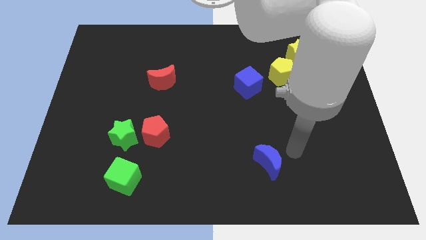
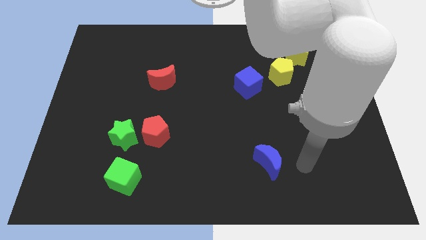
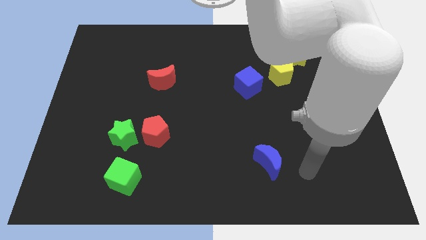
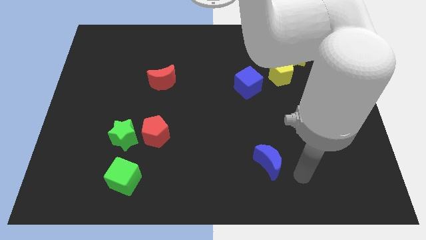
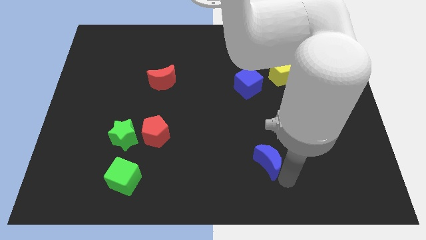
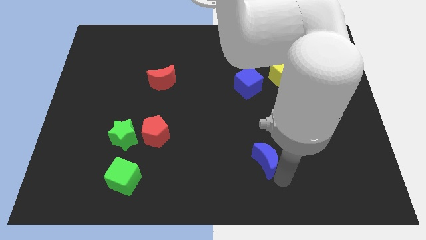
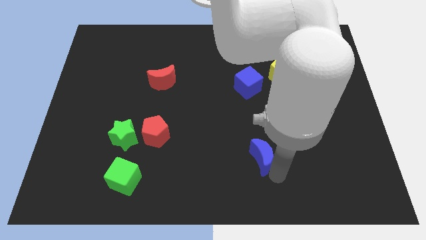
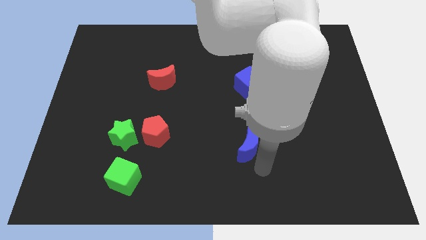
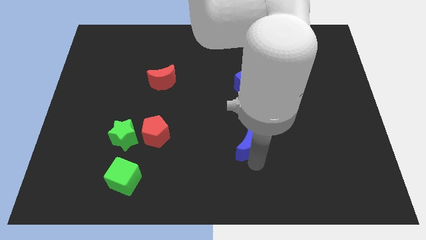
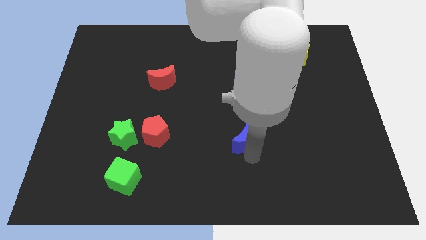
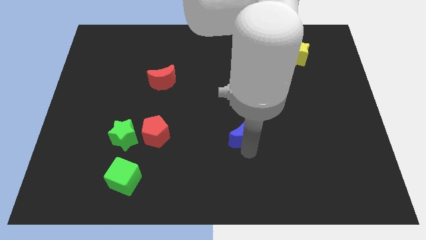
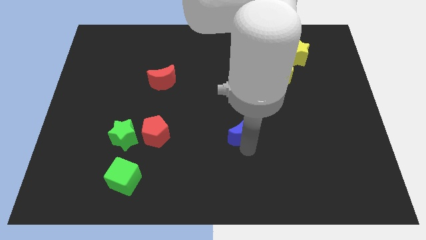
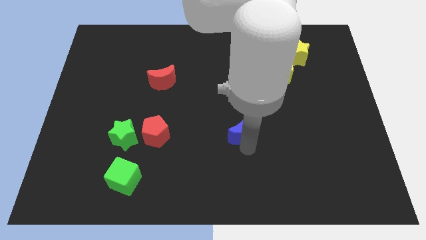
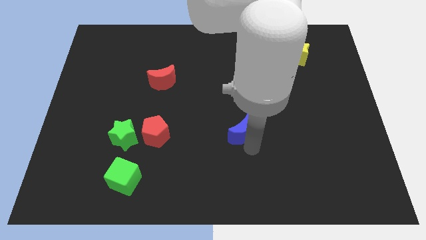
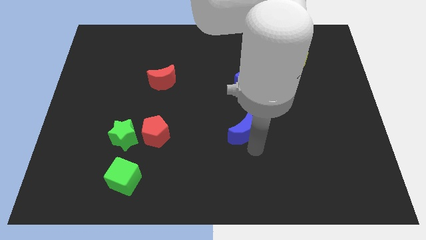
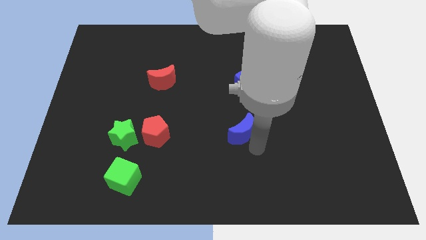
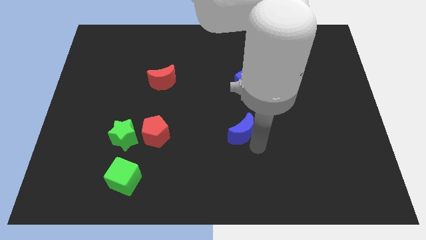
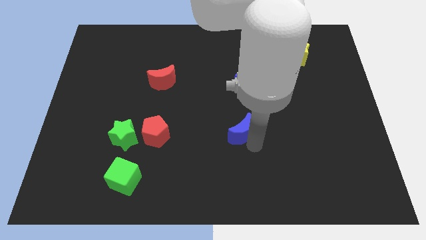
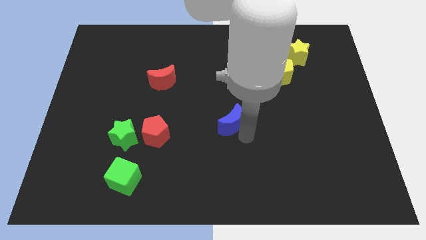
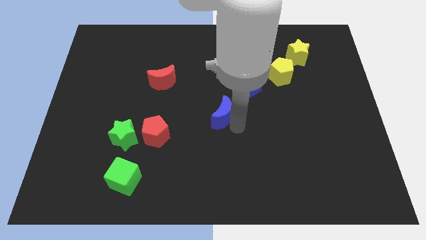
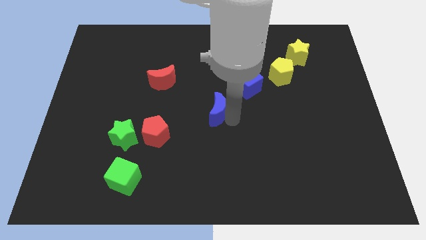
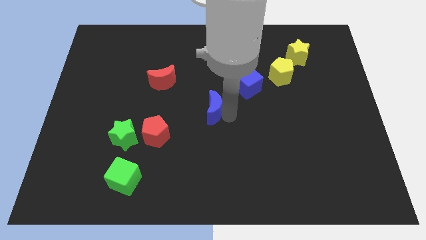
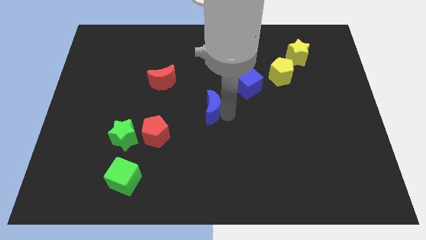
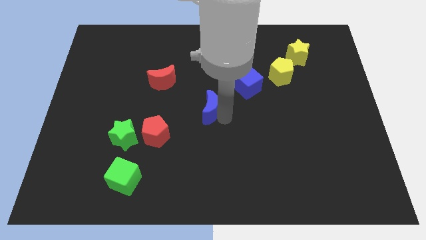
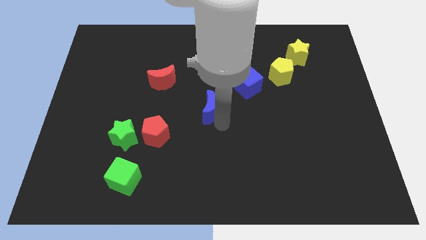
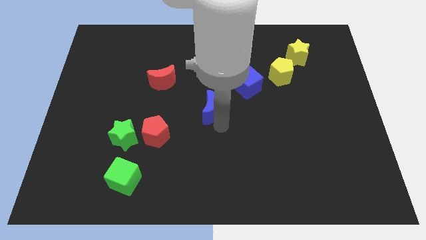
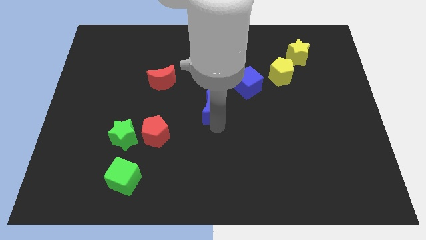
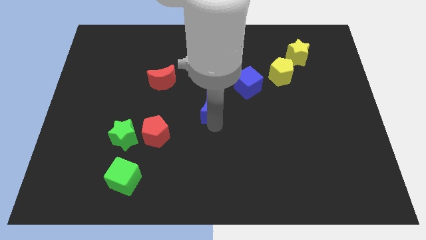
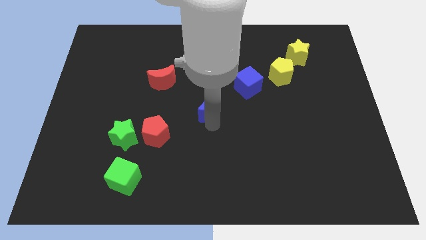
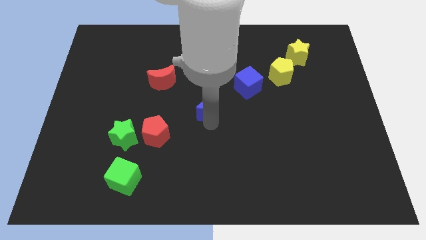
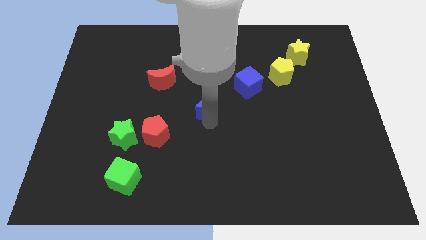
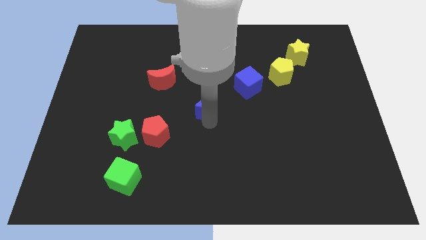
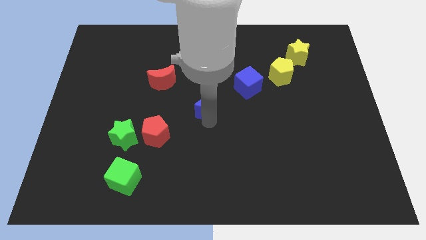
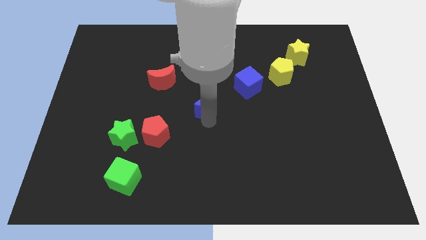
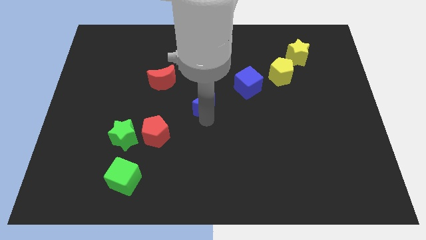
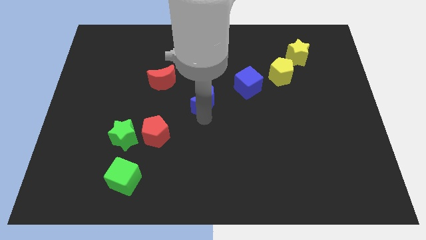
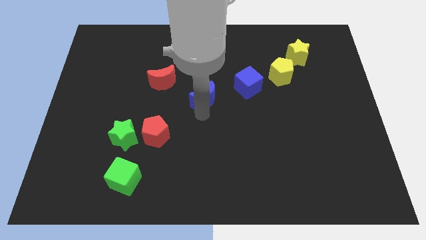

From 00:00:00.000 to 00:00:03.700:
place the blue moon diagonal bottom left to the blue cube

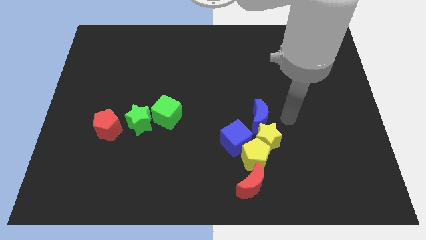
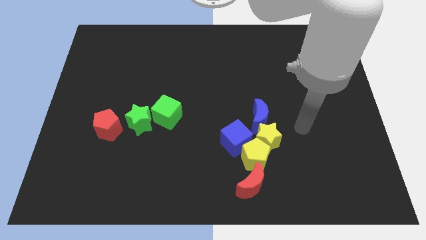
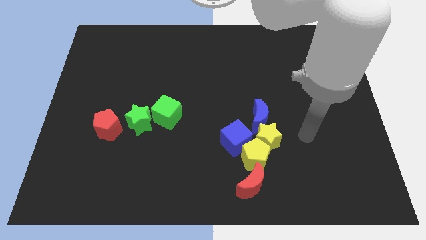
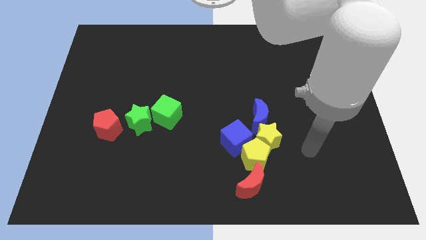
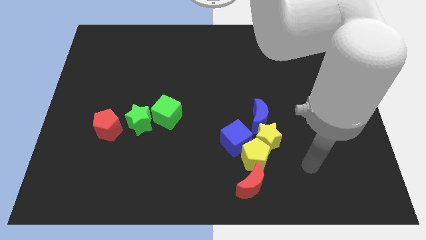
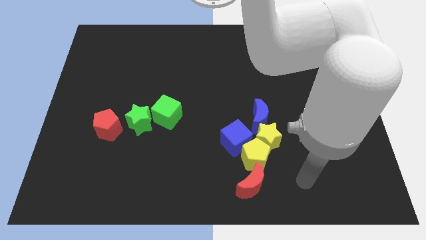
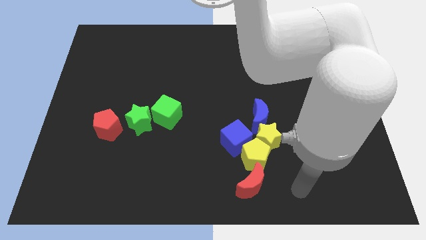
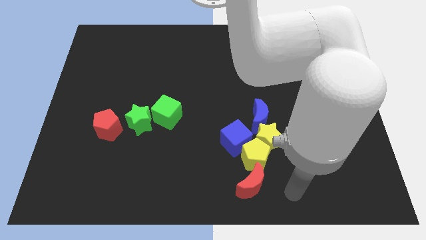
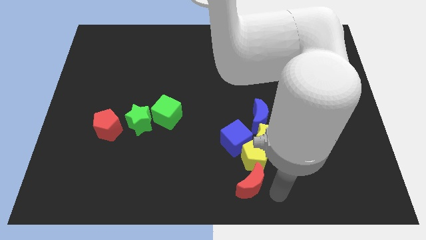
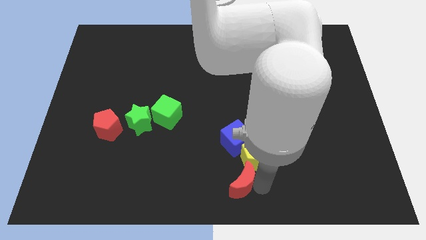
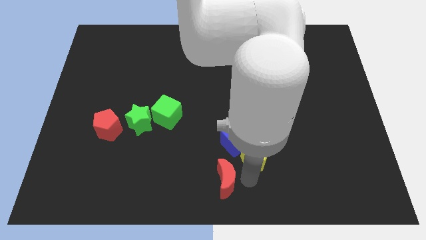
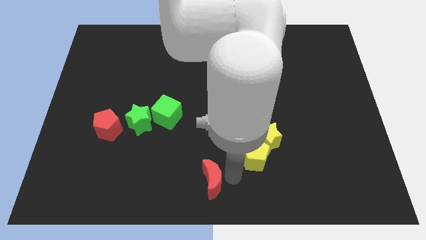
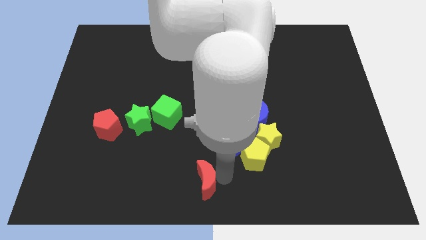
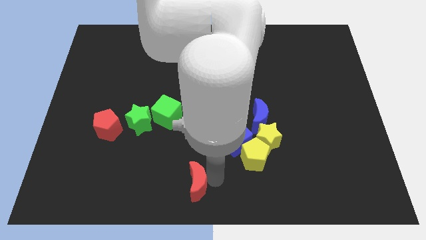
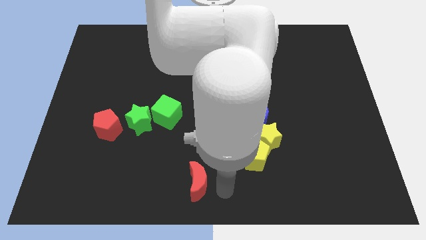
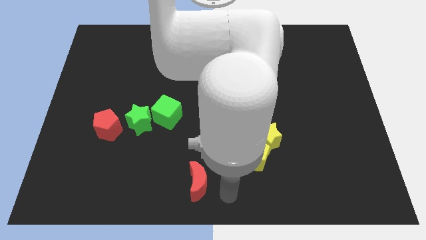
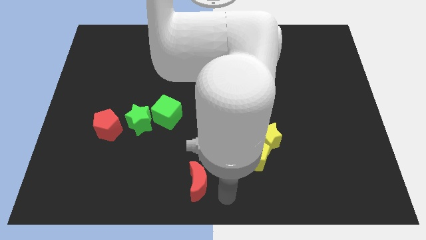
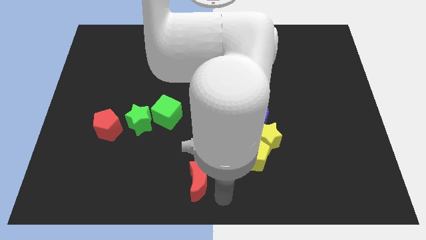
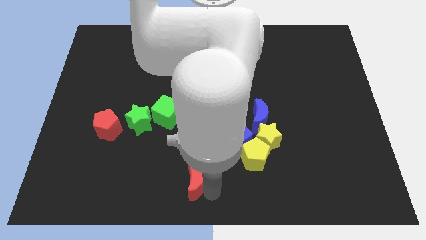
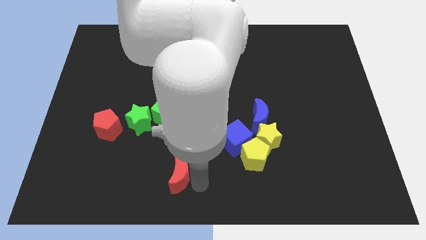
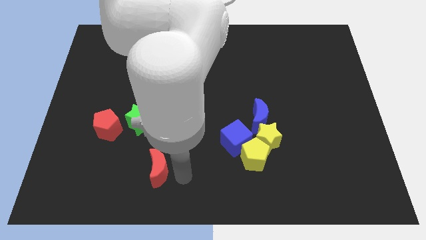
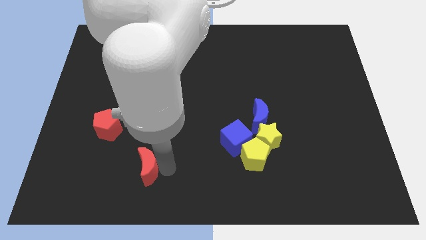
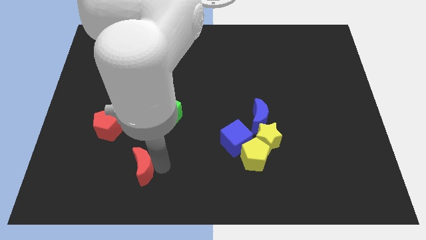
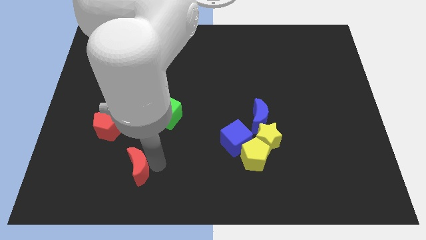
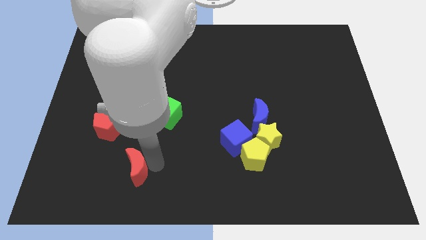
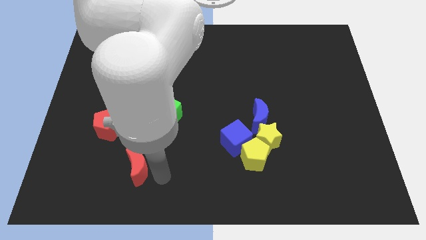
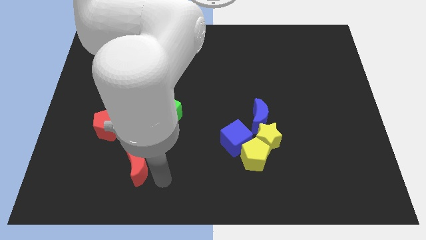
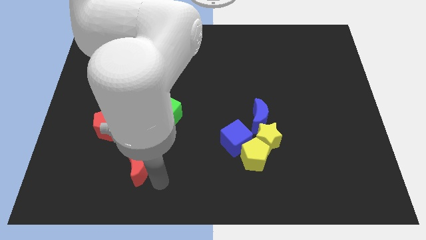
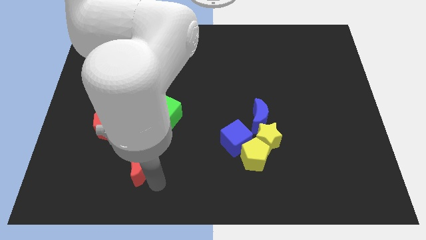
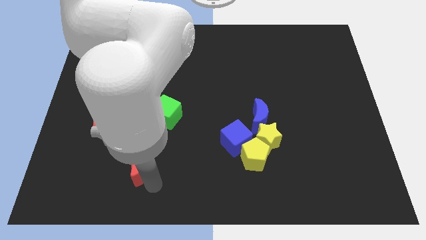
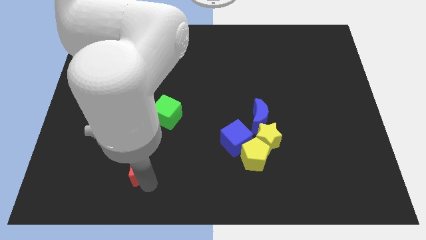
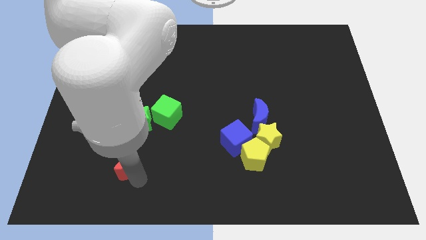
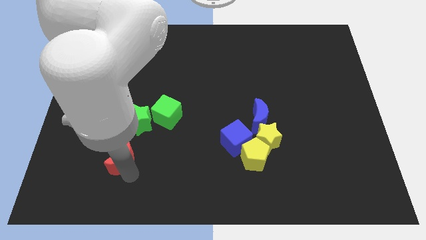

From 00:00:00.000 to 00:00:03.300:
move the red crescent to the bottom of the green star

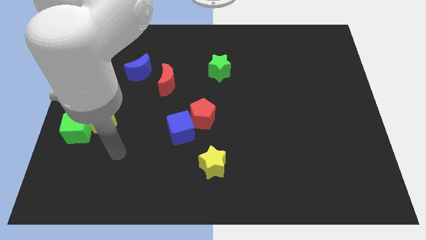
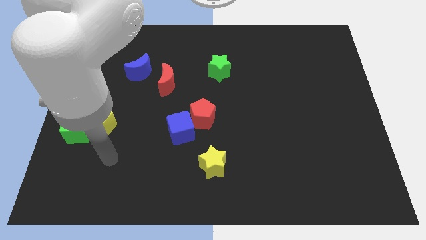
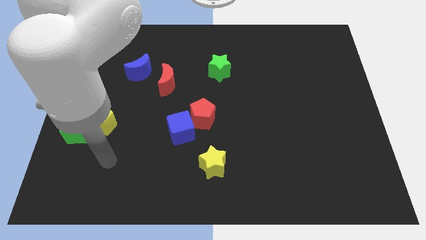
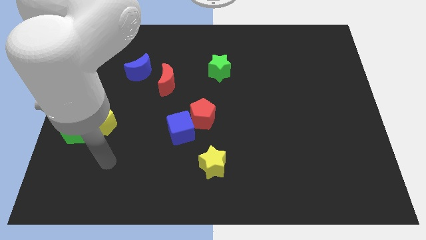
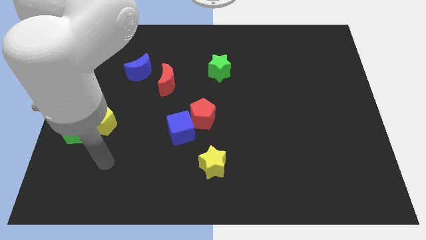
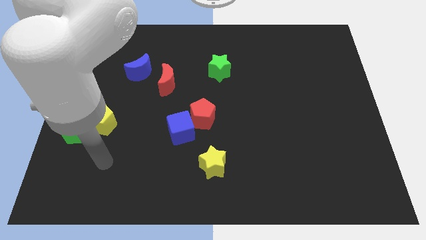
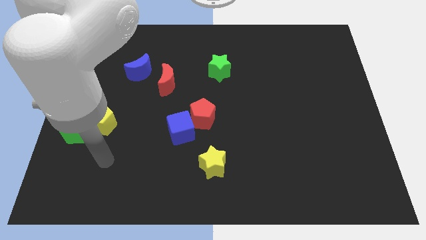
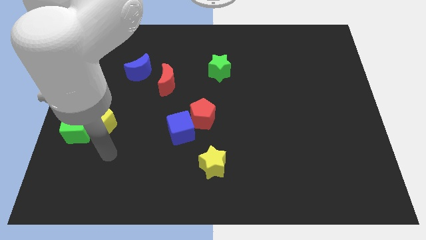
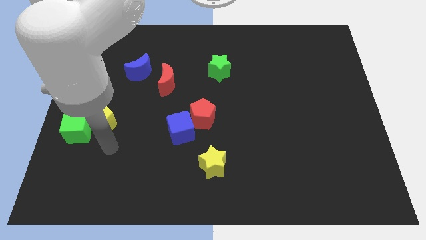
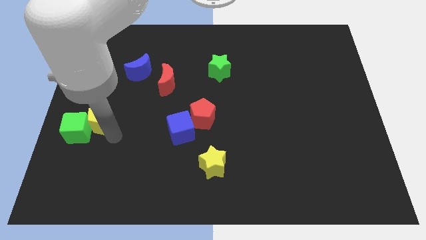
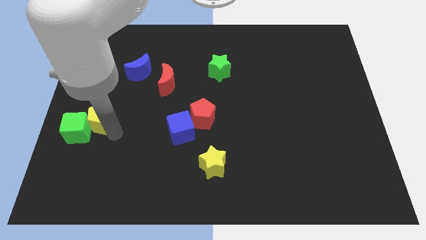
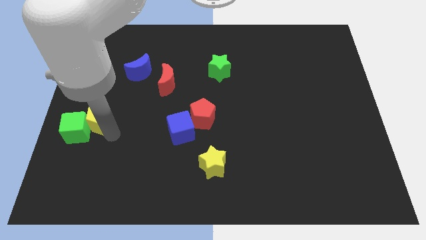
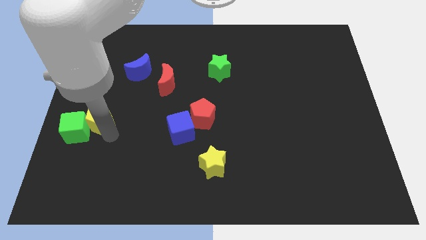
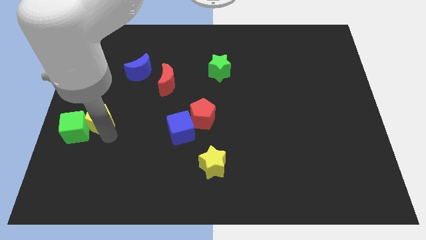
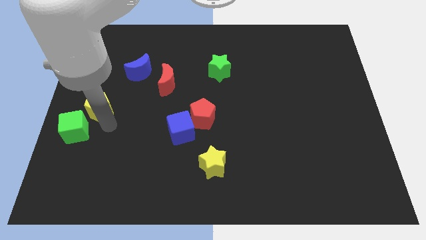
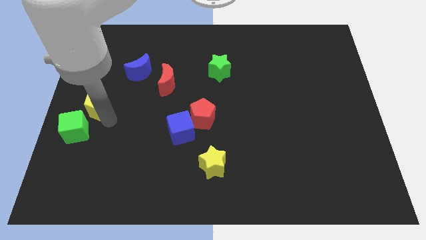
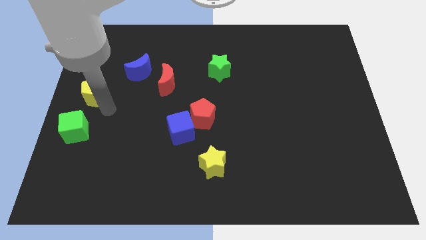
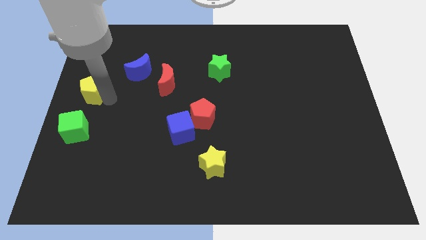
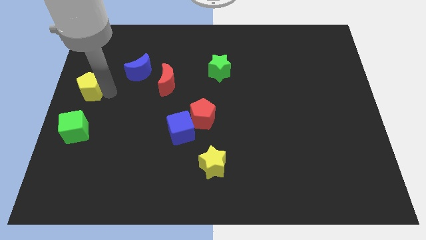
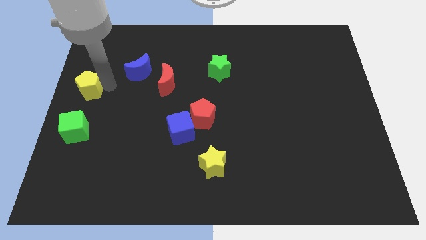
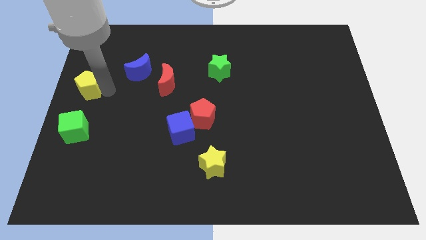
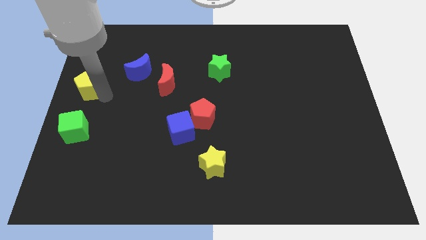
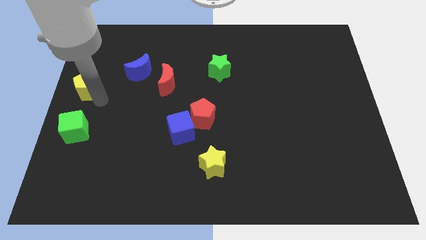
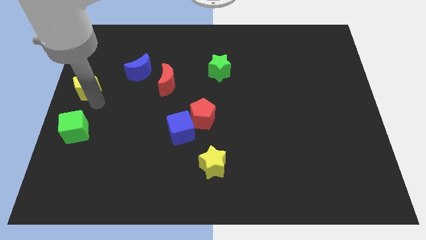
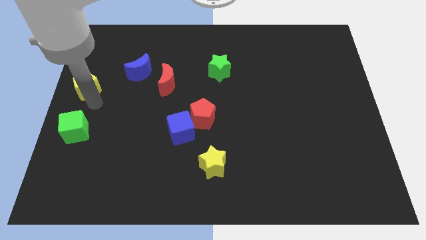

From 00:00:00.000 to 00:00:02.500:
separate yellow pentagon from the green cube
